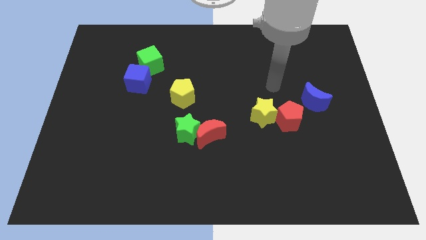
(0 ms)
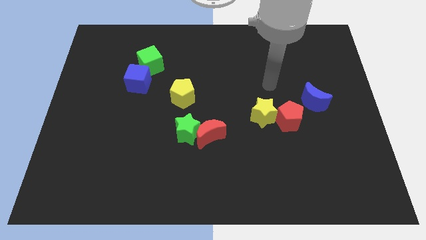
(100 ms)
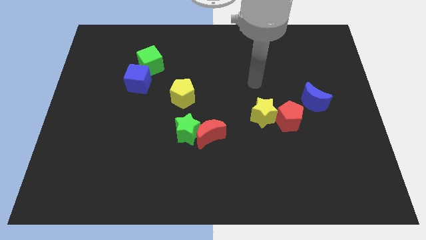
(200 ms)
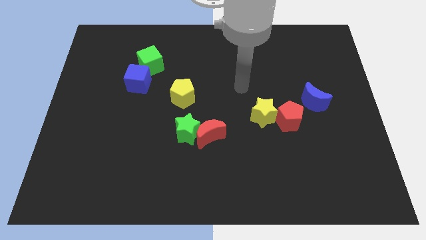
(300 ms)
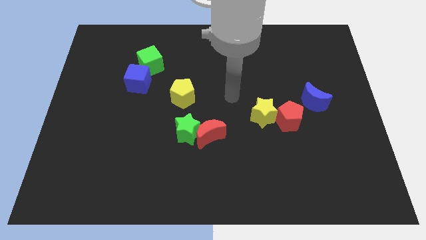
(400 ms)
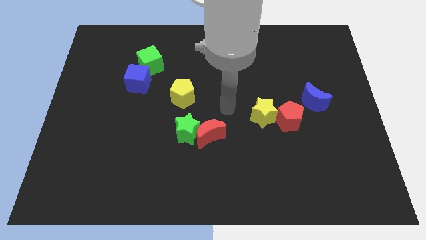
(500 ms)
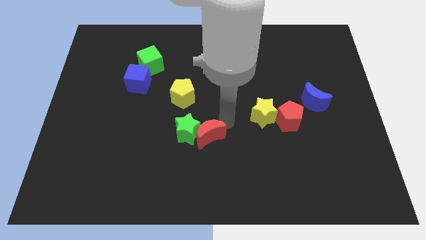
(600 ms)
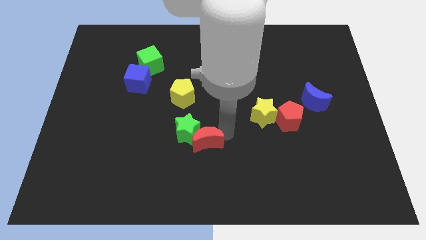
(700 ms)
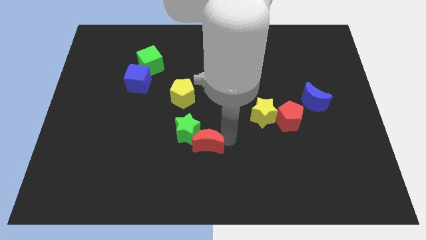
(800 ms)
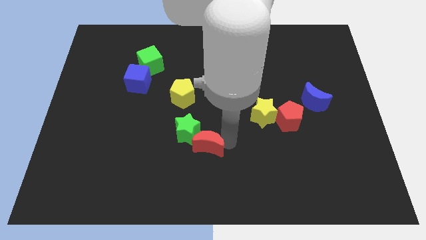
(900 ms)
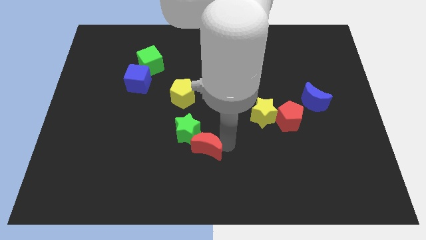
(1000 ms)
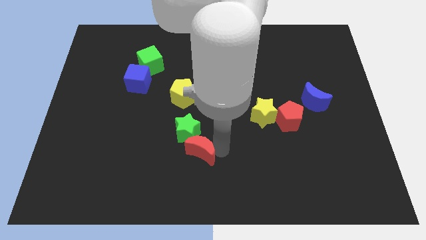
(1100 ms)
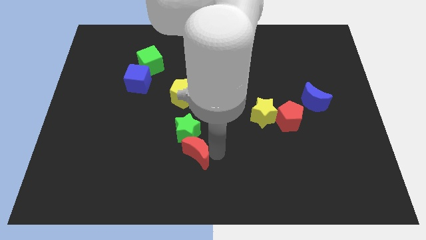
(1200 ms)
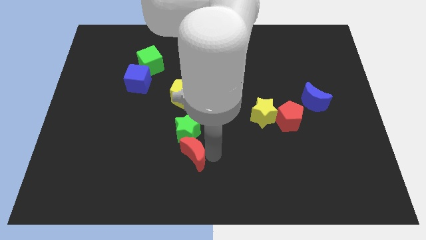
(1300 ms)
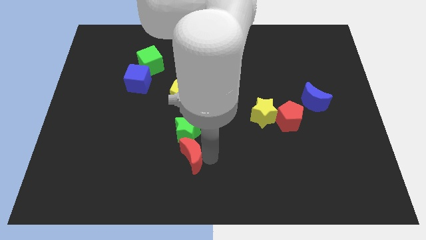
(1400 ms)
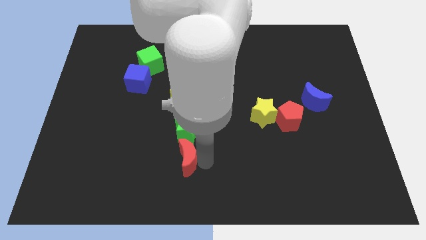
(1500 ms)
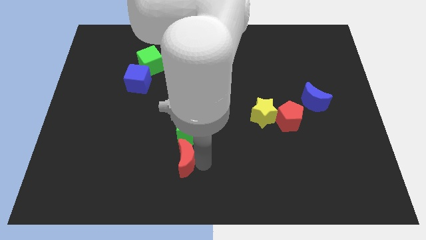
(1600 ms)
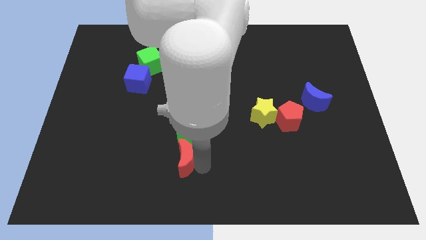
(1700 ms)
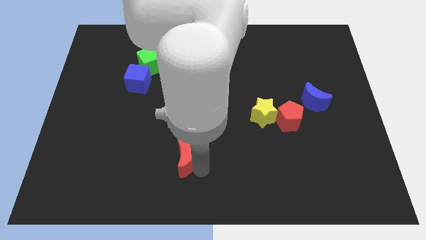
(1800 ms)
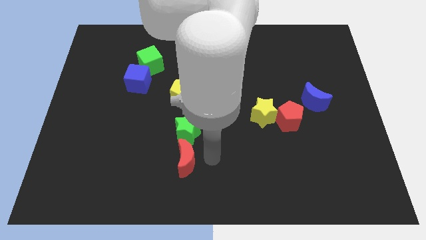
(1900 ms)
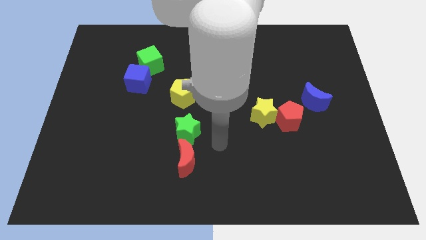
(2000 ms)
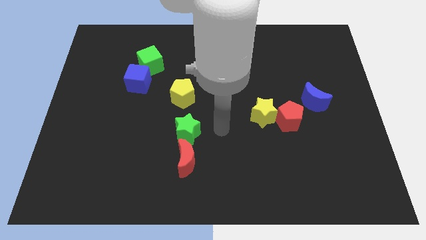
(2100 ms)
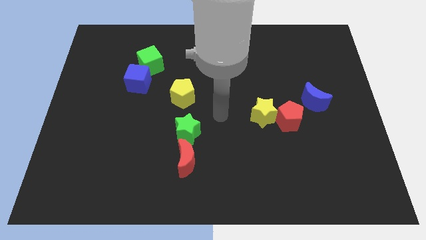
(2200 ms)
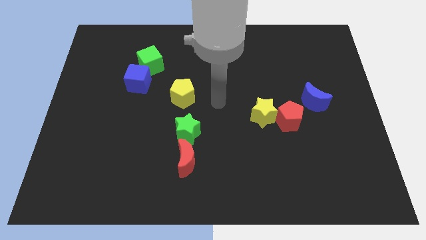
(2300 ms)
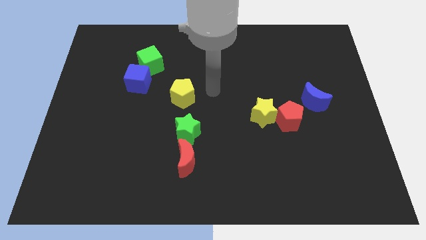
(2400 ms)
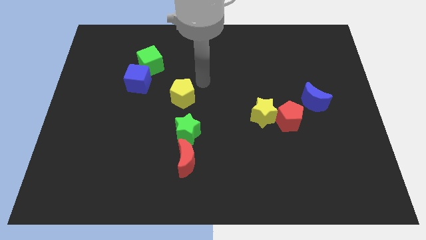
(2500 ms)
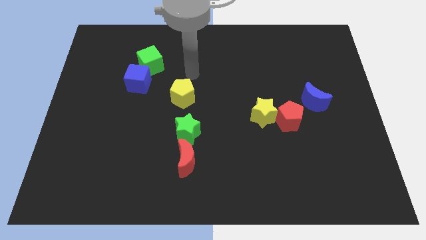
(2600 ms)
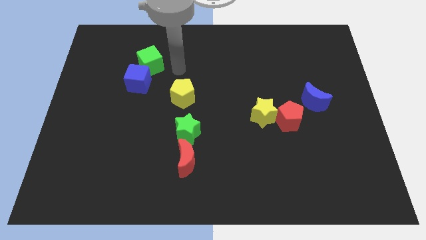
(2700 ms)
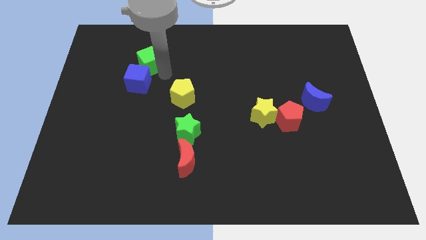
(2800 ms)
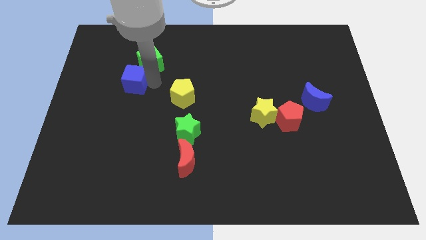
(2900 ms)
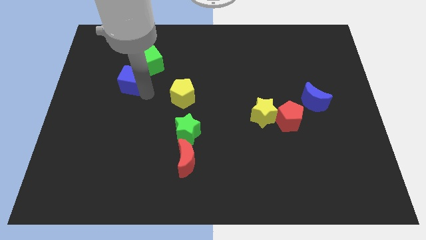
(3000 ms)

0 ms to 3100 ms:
push the red moon to the bottom side of the green star

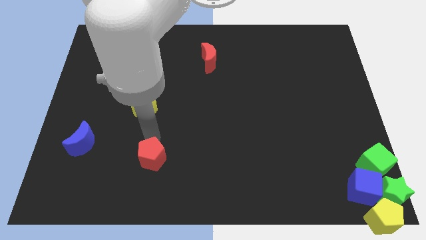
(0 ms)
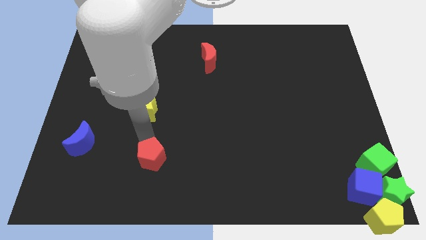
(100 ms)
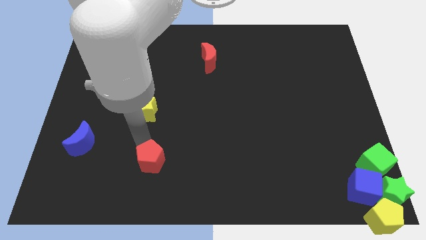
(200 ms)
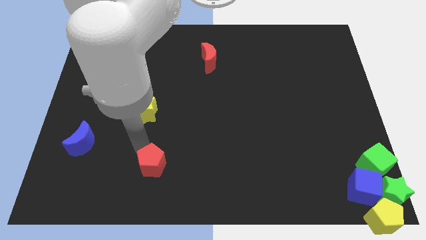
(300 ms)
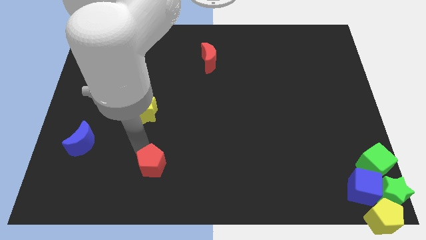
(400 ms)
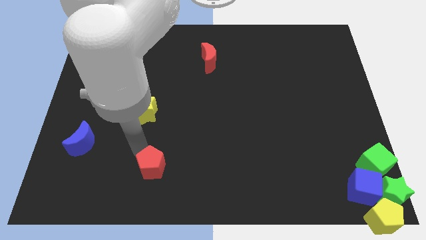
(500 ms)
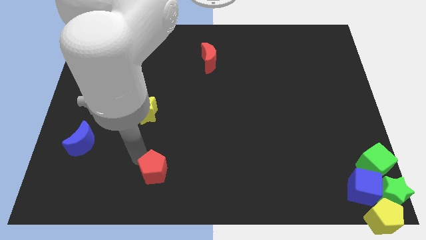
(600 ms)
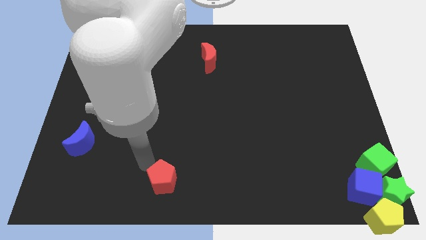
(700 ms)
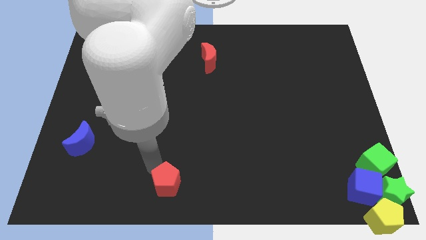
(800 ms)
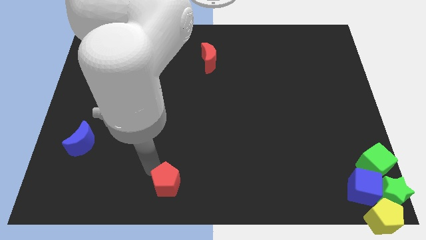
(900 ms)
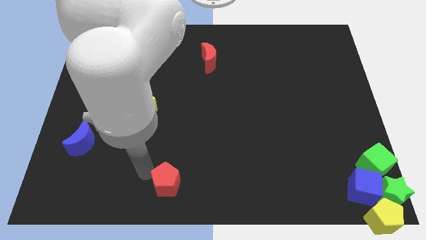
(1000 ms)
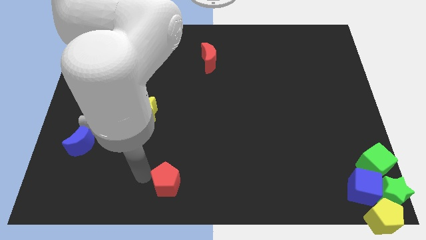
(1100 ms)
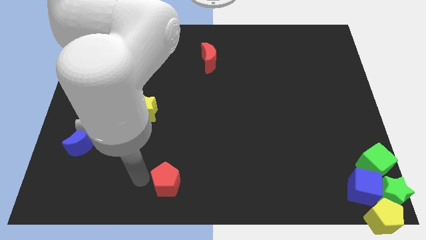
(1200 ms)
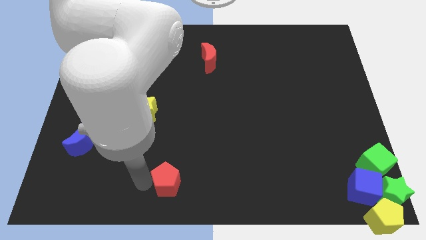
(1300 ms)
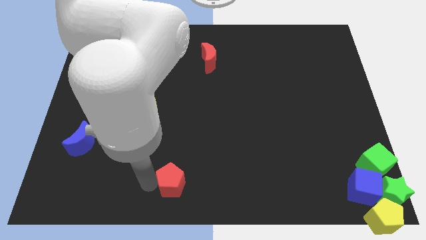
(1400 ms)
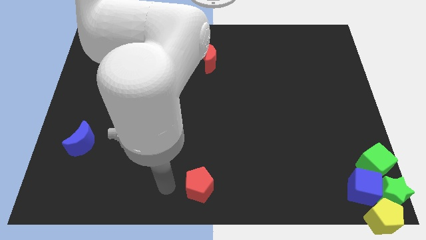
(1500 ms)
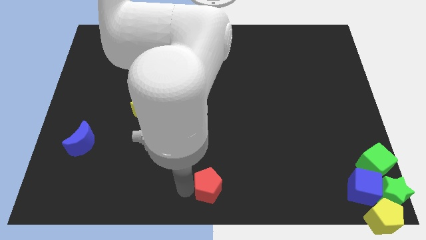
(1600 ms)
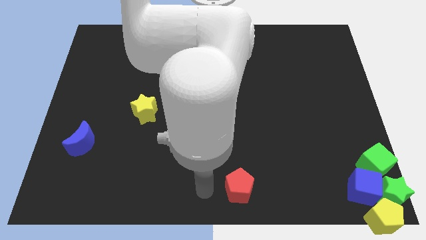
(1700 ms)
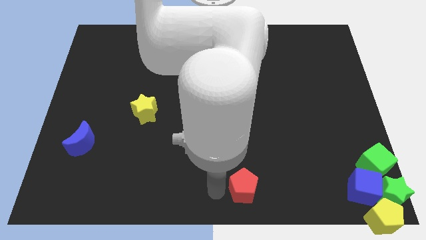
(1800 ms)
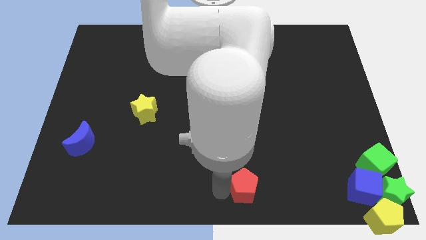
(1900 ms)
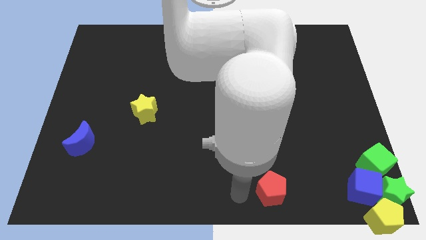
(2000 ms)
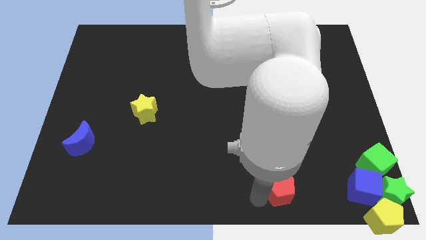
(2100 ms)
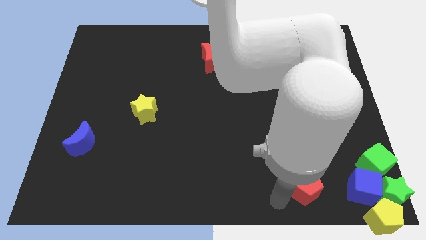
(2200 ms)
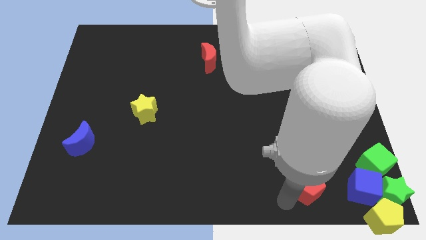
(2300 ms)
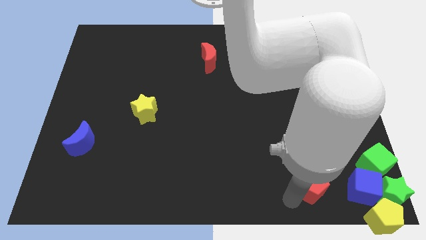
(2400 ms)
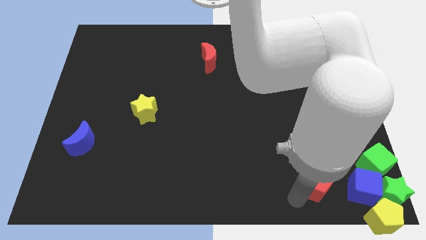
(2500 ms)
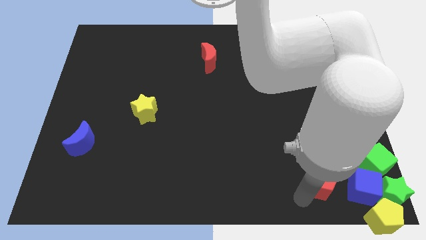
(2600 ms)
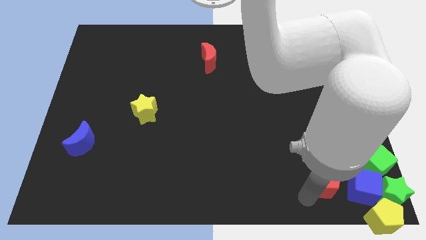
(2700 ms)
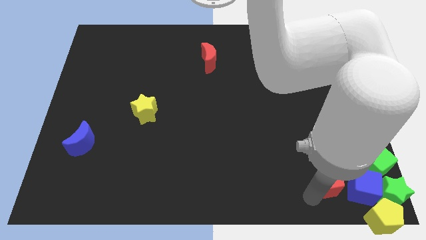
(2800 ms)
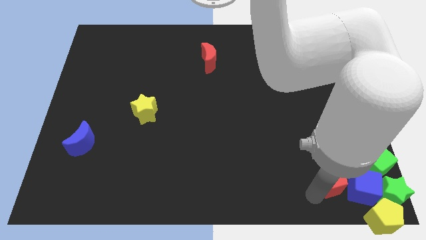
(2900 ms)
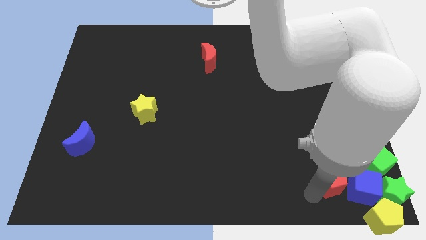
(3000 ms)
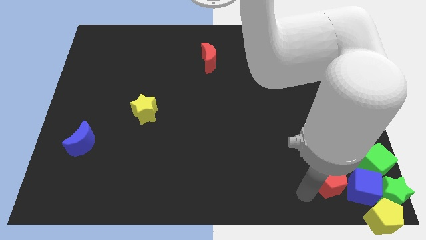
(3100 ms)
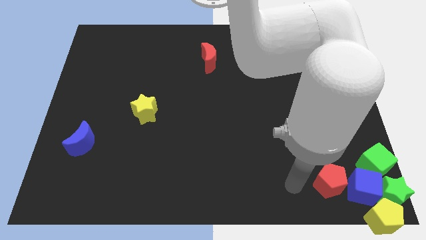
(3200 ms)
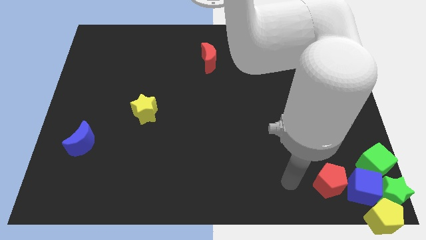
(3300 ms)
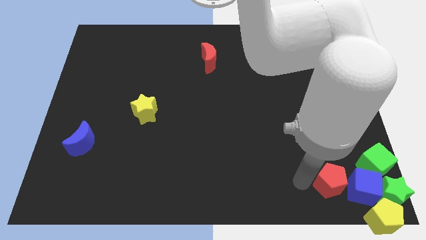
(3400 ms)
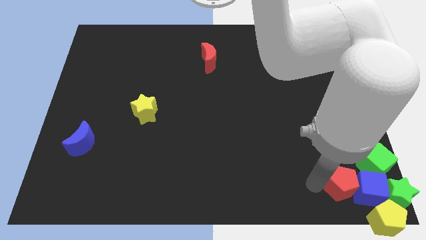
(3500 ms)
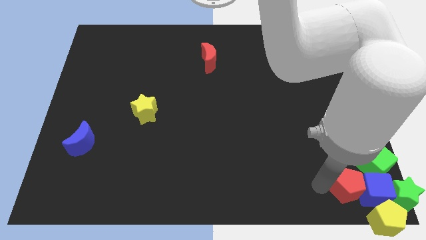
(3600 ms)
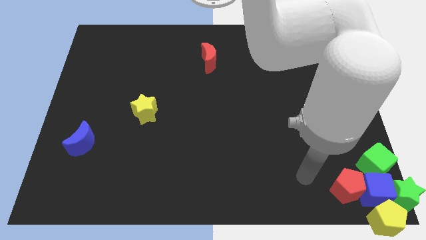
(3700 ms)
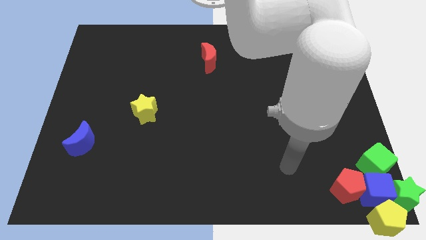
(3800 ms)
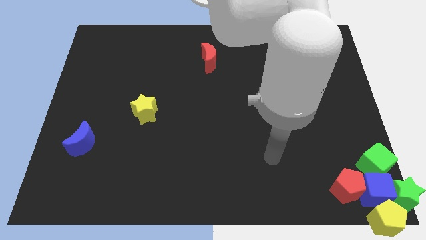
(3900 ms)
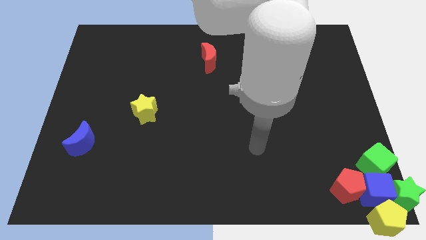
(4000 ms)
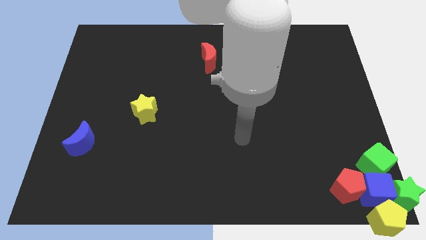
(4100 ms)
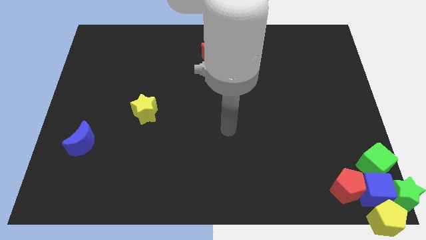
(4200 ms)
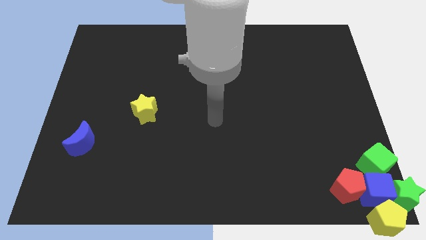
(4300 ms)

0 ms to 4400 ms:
slide the red pentagon into the blue cube

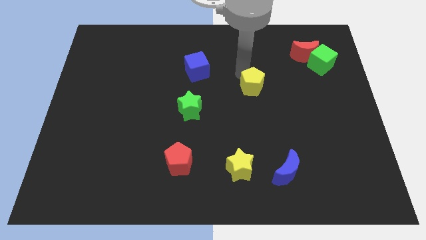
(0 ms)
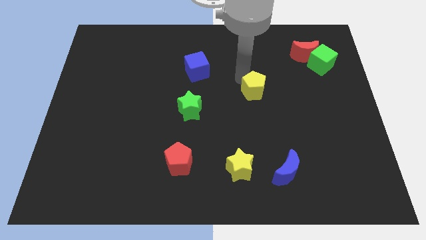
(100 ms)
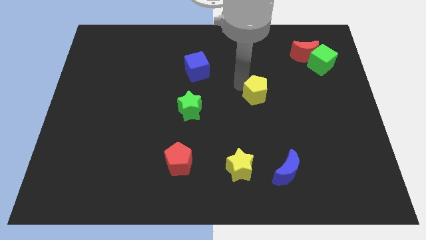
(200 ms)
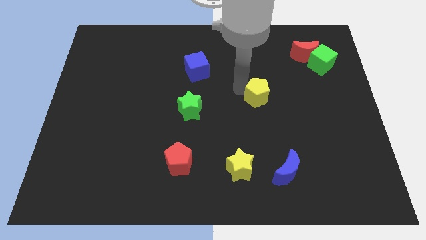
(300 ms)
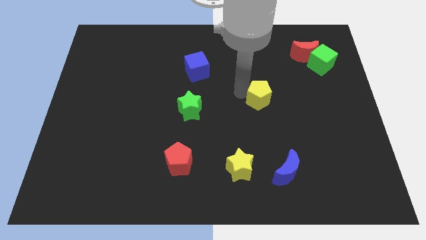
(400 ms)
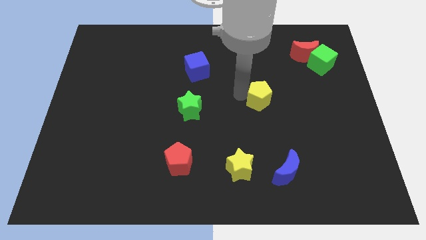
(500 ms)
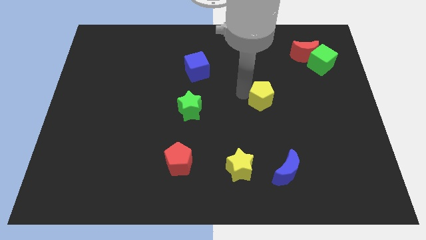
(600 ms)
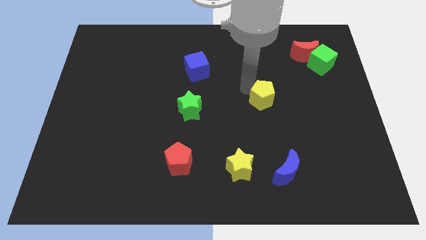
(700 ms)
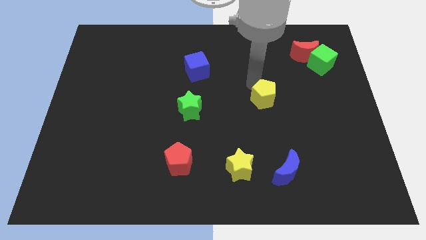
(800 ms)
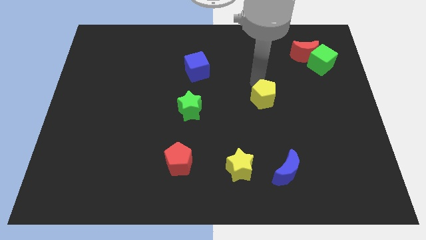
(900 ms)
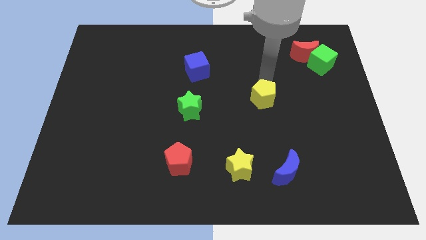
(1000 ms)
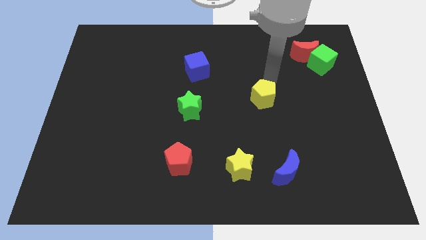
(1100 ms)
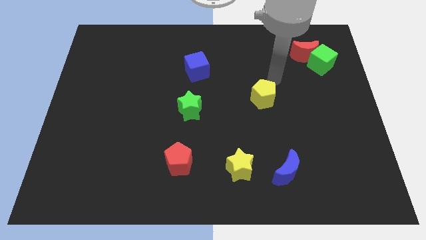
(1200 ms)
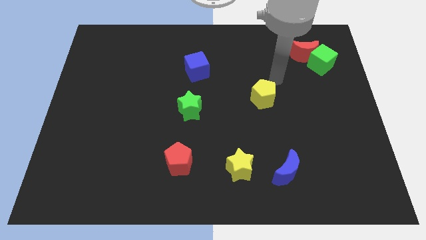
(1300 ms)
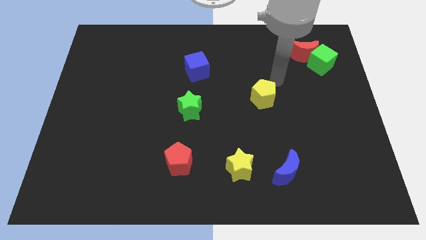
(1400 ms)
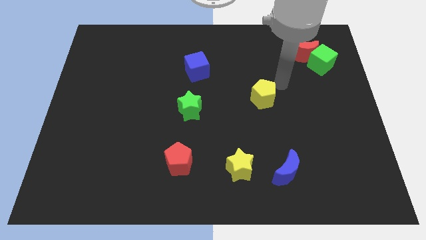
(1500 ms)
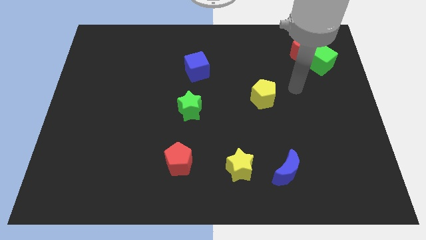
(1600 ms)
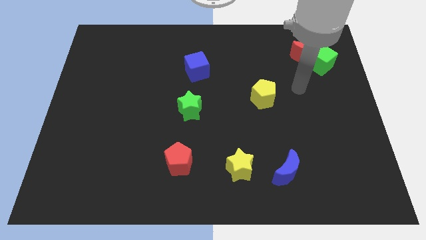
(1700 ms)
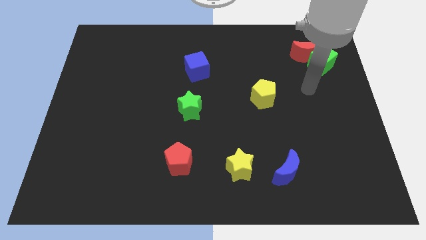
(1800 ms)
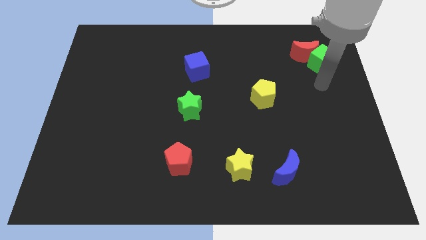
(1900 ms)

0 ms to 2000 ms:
slide the yellow pentagon to the right of green star
